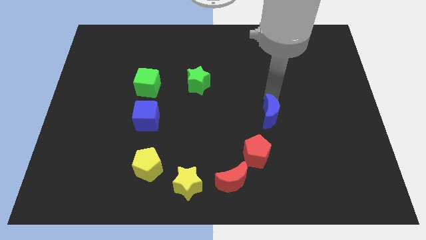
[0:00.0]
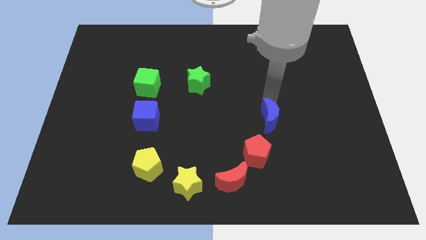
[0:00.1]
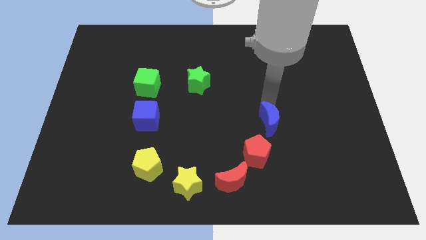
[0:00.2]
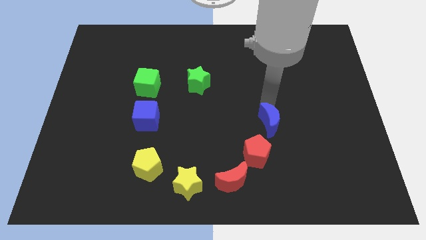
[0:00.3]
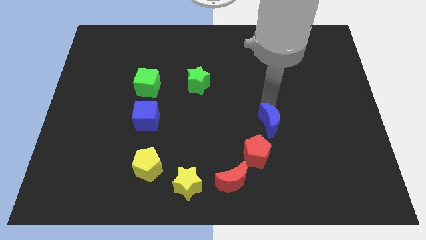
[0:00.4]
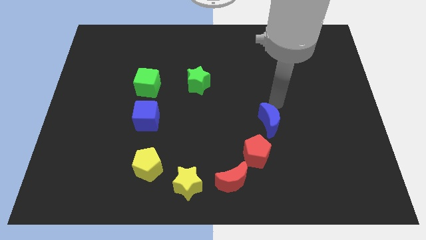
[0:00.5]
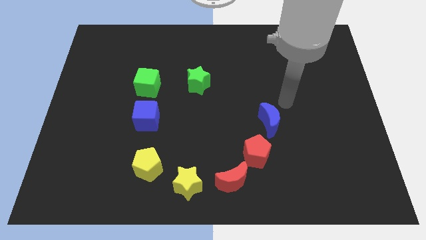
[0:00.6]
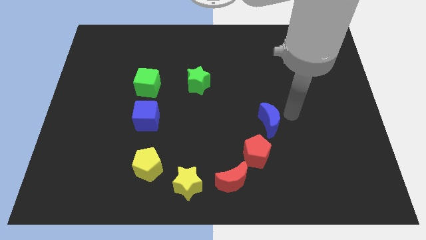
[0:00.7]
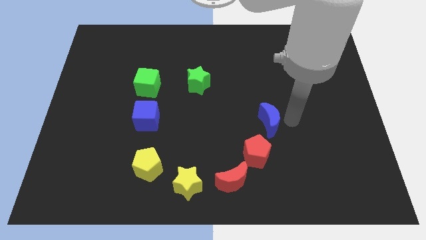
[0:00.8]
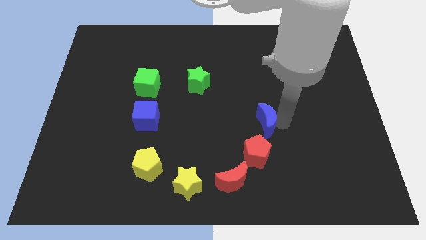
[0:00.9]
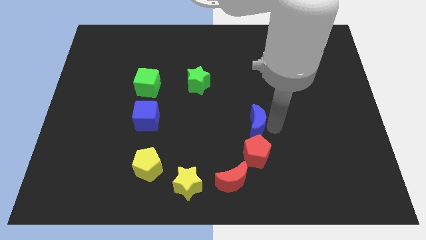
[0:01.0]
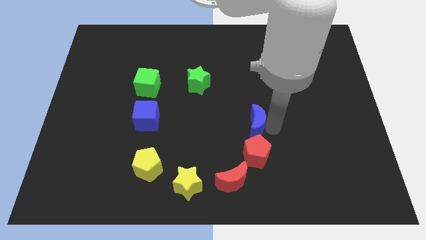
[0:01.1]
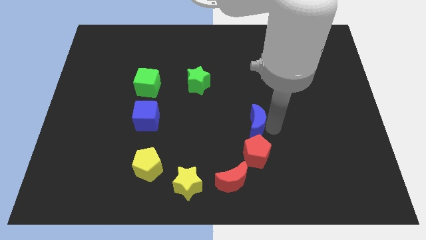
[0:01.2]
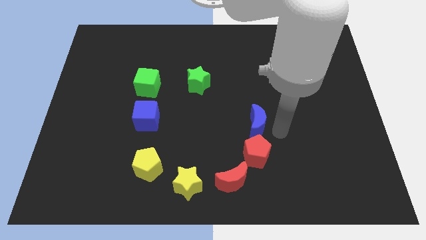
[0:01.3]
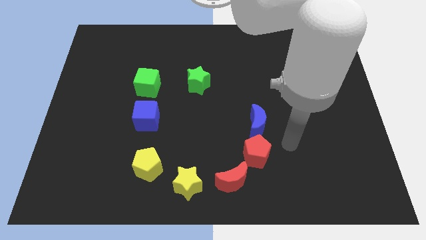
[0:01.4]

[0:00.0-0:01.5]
place the blue moon above th ered pentagon

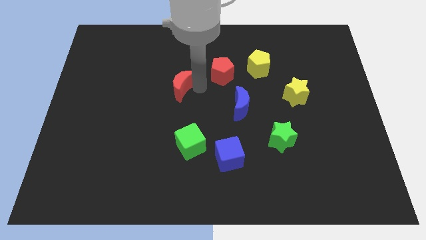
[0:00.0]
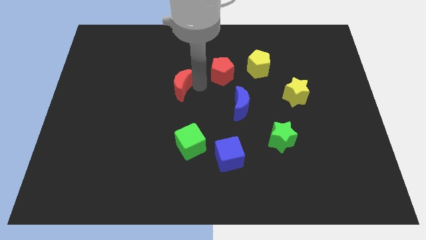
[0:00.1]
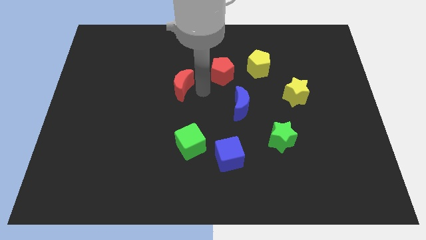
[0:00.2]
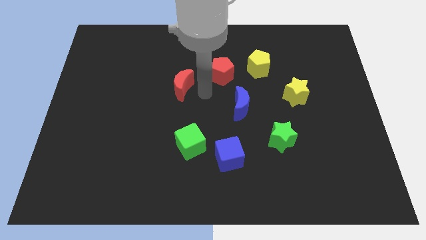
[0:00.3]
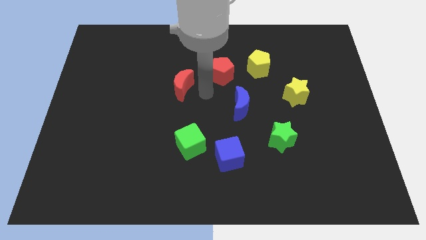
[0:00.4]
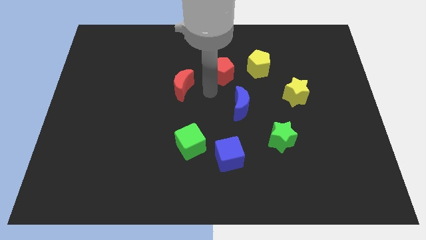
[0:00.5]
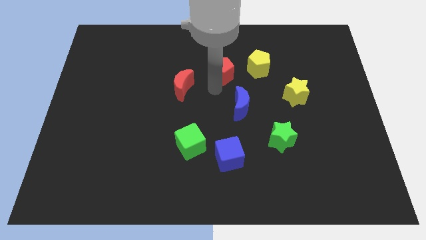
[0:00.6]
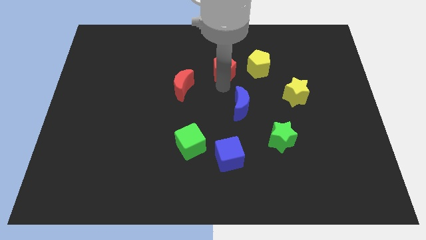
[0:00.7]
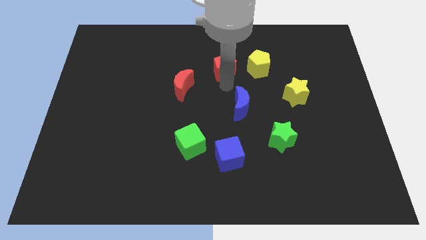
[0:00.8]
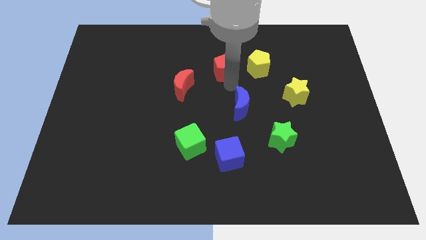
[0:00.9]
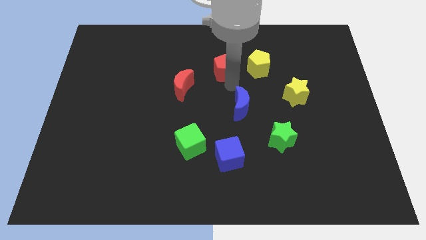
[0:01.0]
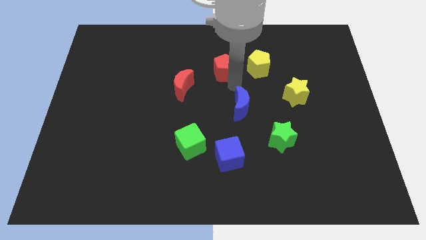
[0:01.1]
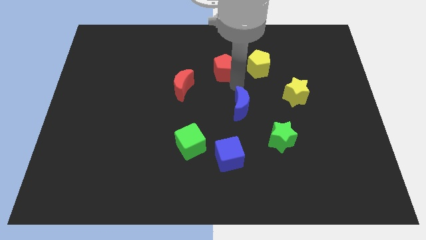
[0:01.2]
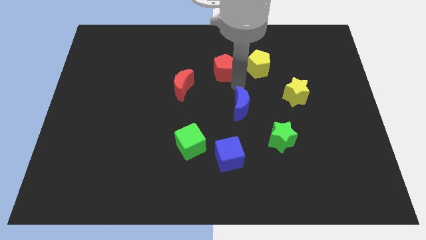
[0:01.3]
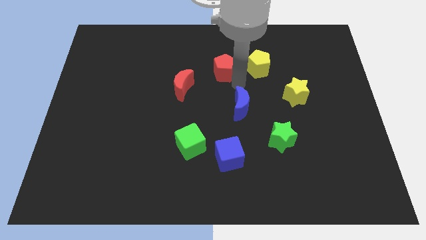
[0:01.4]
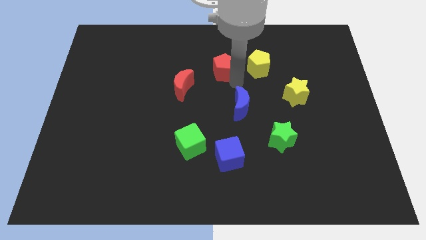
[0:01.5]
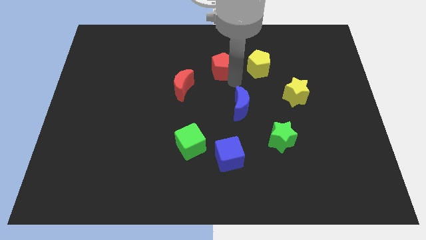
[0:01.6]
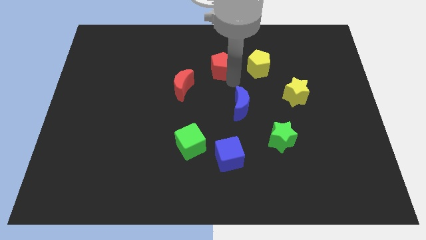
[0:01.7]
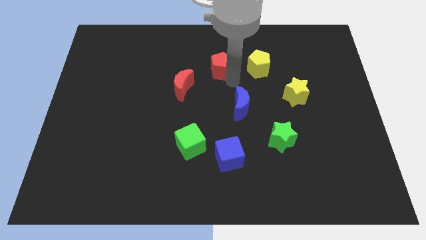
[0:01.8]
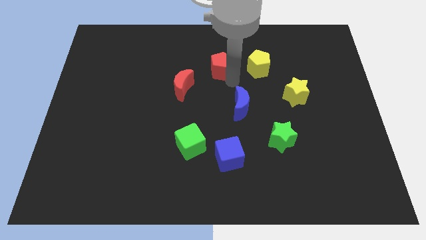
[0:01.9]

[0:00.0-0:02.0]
move the red pentagon slightly towards the top center of the board

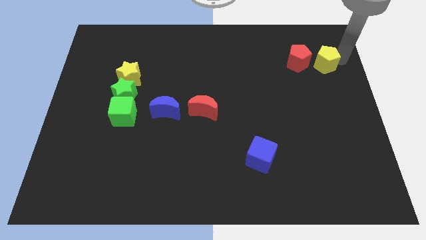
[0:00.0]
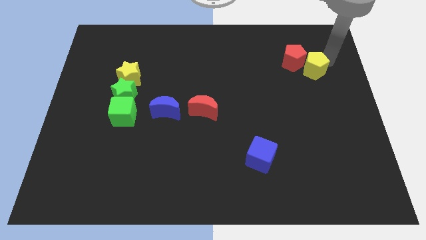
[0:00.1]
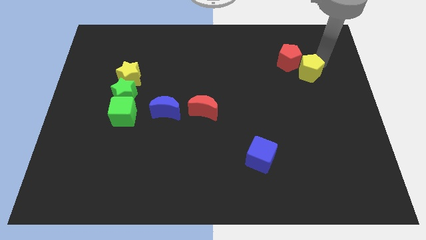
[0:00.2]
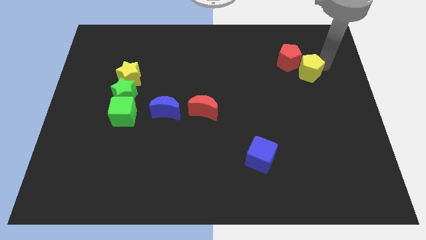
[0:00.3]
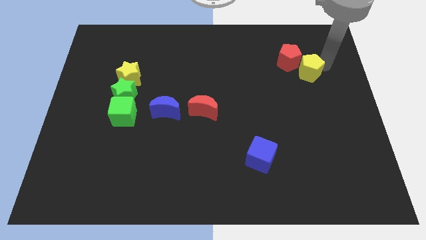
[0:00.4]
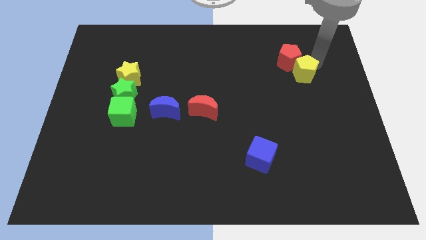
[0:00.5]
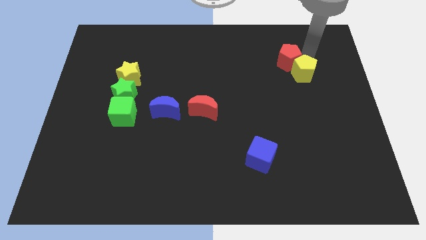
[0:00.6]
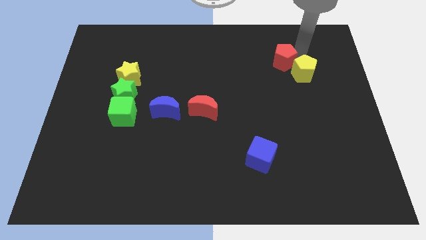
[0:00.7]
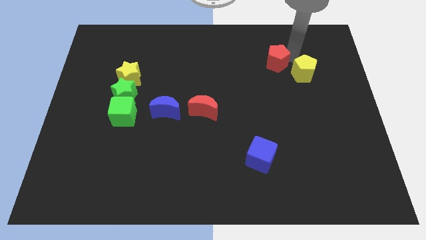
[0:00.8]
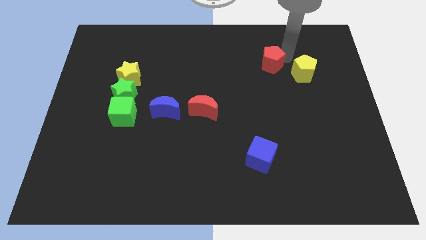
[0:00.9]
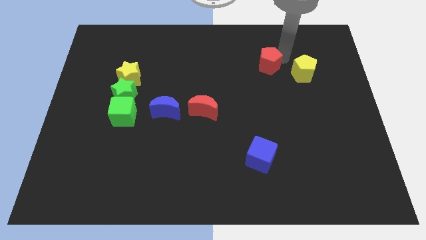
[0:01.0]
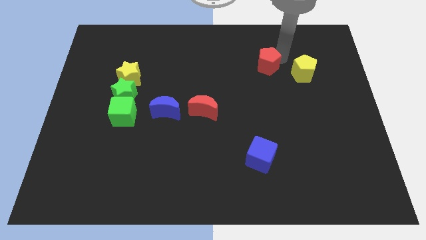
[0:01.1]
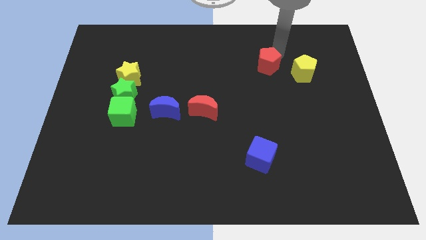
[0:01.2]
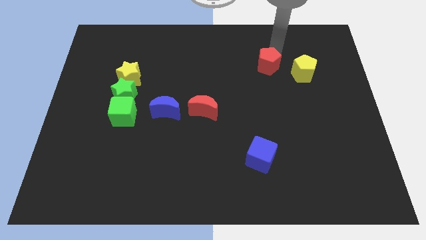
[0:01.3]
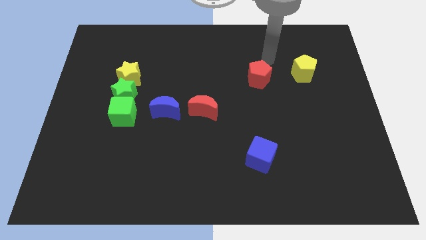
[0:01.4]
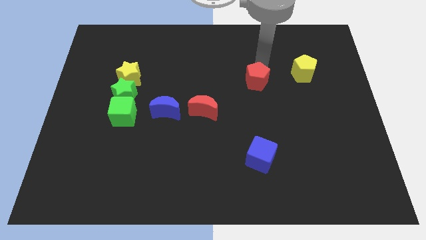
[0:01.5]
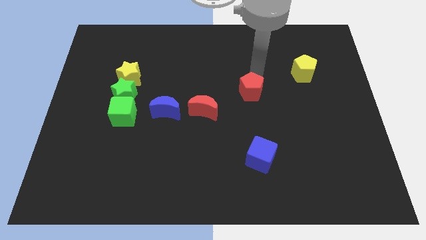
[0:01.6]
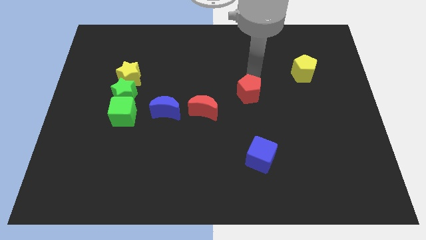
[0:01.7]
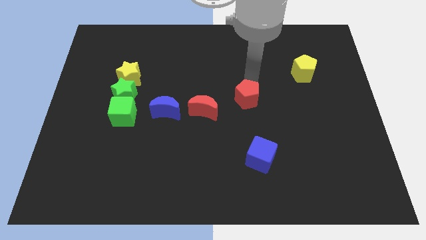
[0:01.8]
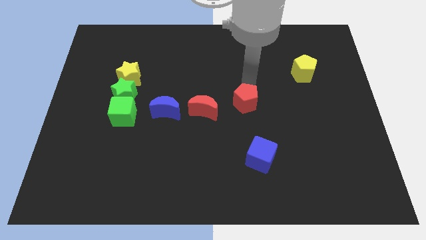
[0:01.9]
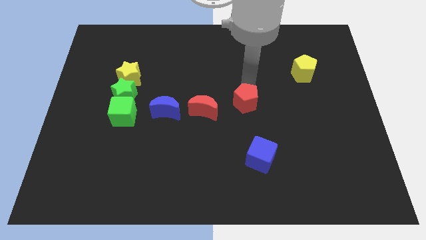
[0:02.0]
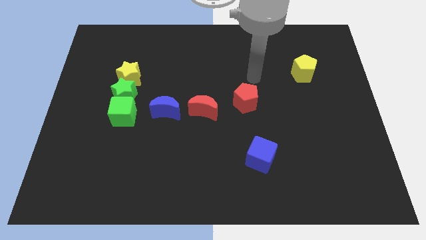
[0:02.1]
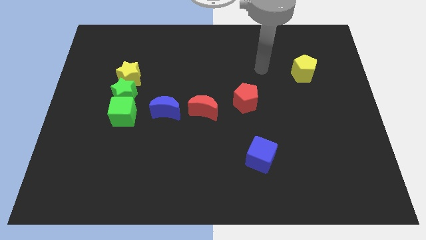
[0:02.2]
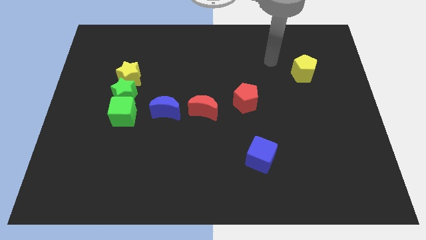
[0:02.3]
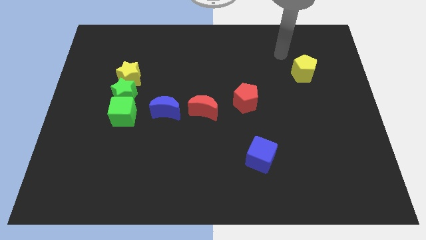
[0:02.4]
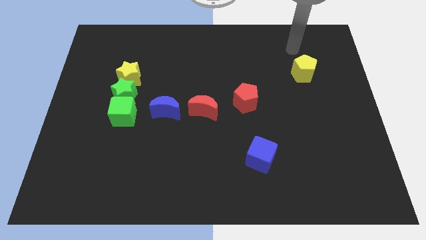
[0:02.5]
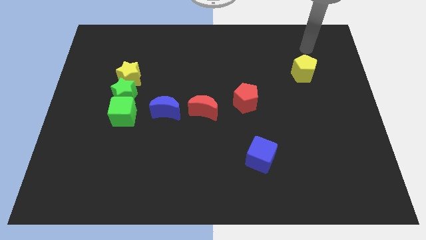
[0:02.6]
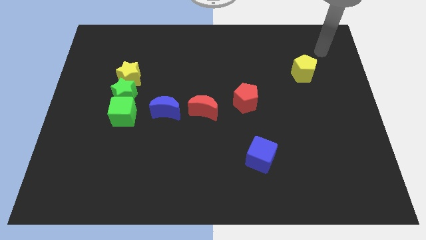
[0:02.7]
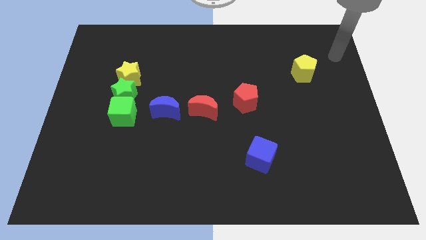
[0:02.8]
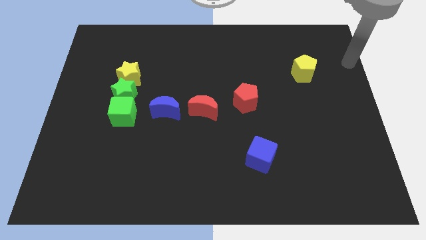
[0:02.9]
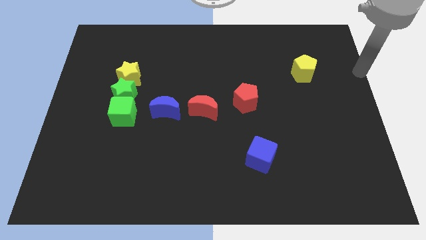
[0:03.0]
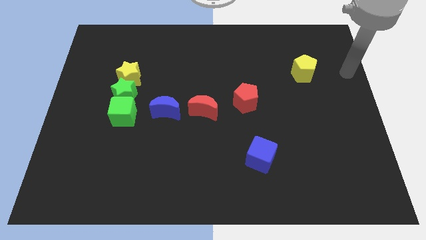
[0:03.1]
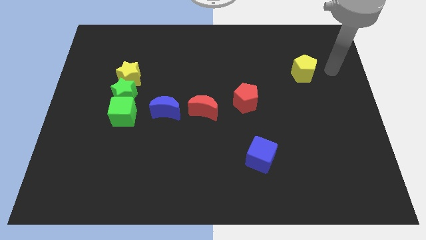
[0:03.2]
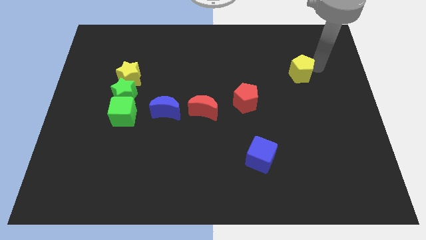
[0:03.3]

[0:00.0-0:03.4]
push the red pentagon to the right side of the red moon

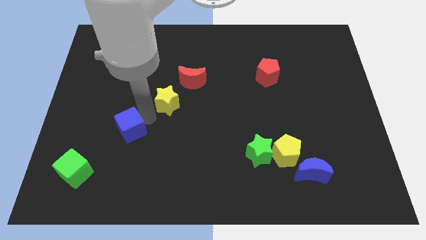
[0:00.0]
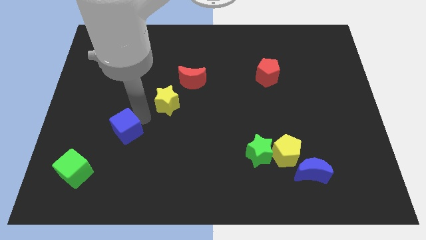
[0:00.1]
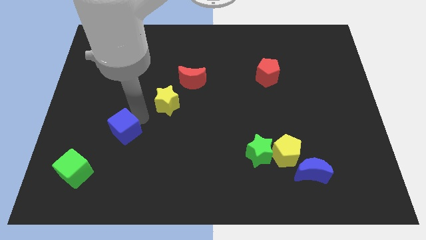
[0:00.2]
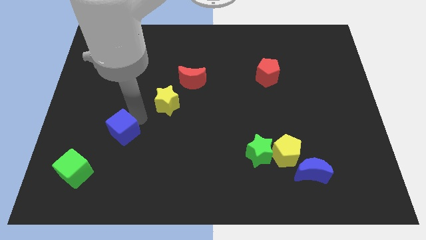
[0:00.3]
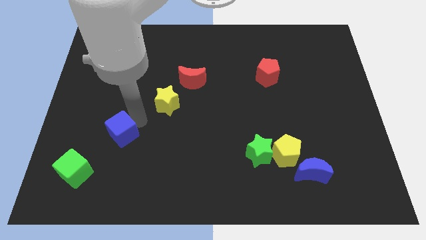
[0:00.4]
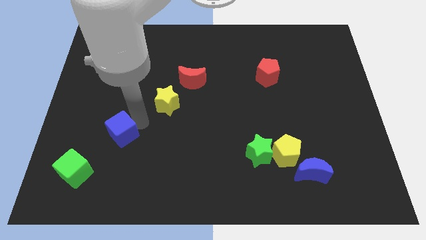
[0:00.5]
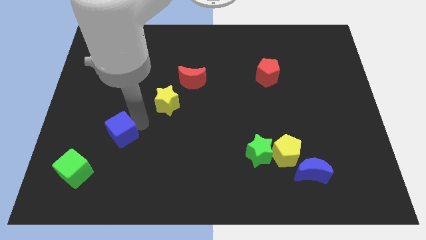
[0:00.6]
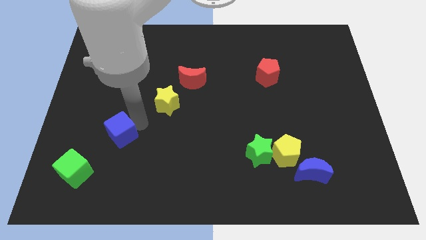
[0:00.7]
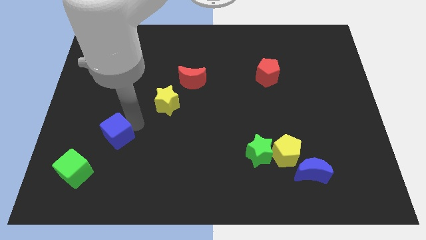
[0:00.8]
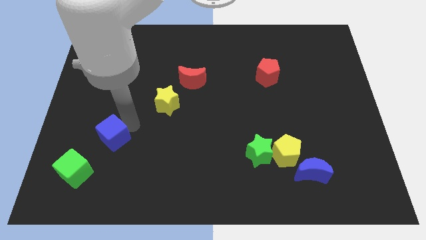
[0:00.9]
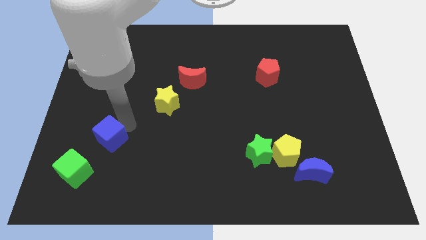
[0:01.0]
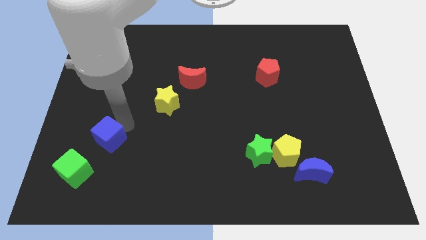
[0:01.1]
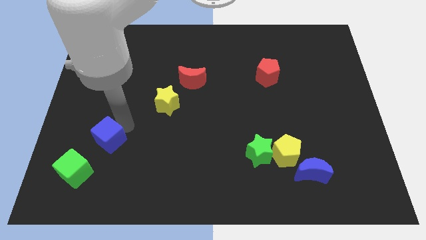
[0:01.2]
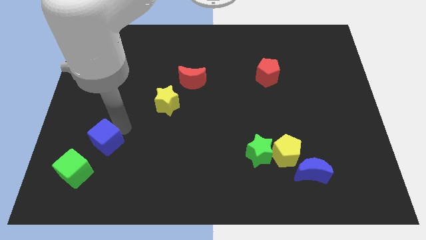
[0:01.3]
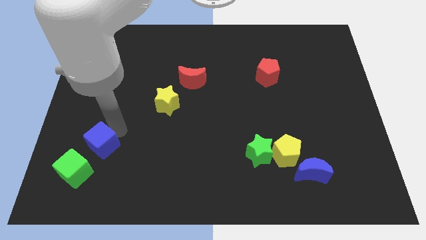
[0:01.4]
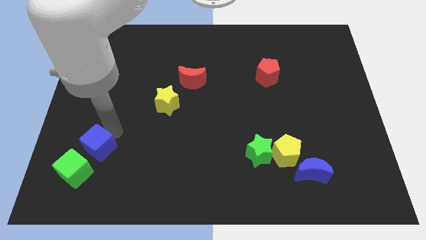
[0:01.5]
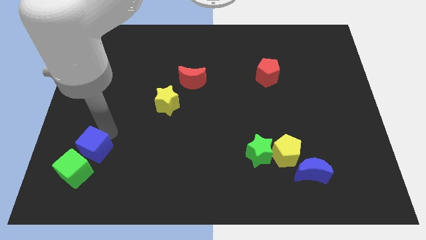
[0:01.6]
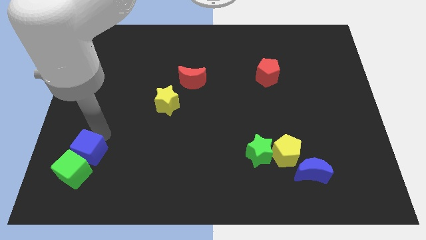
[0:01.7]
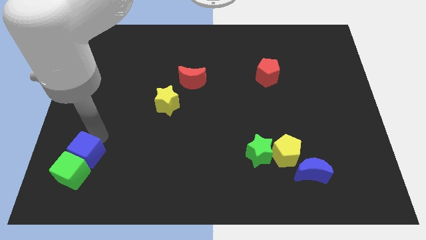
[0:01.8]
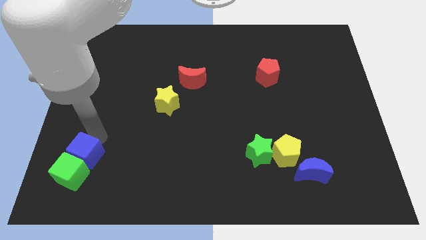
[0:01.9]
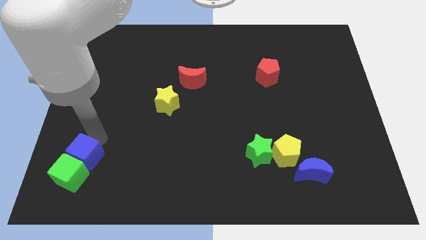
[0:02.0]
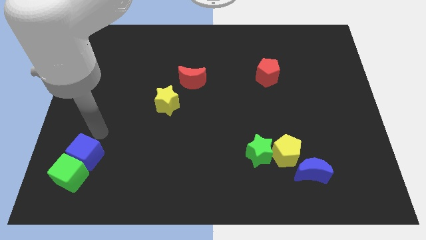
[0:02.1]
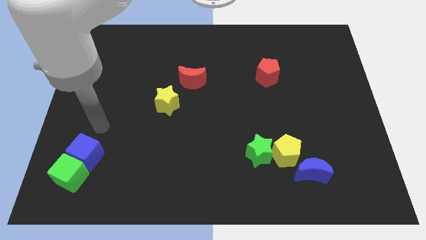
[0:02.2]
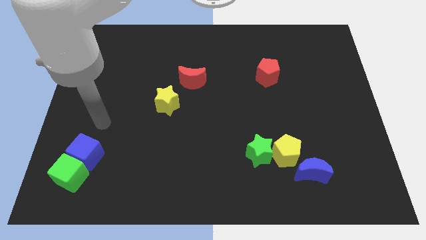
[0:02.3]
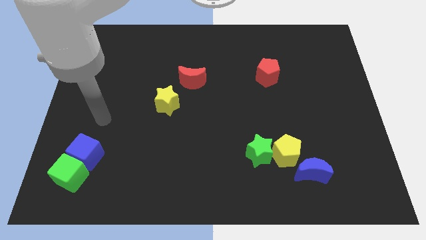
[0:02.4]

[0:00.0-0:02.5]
move the blue cube into the green cube
